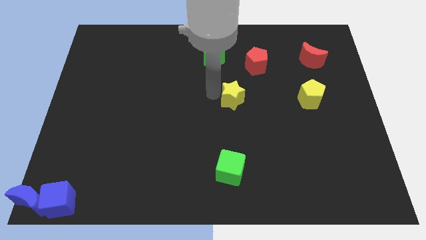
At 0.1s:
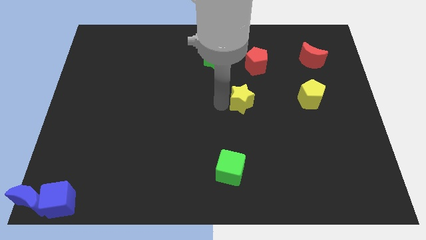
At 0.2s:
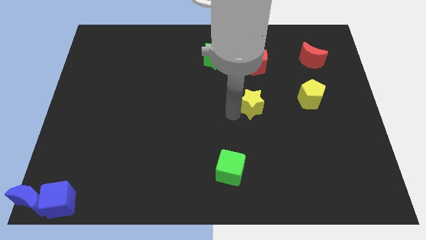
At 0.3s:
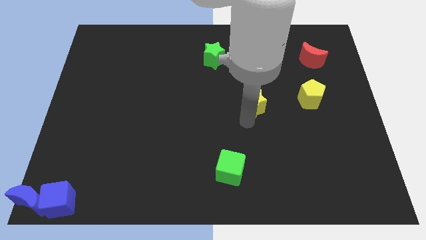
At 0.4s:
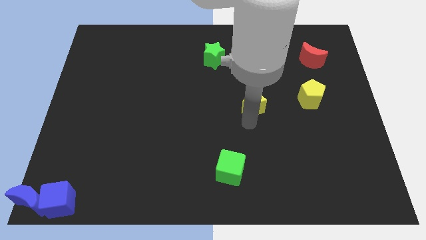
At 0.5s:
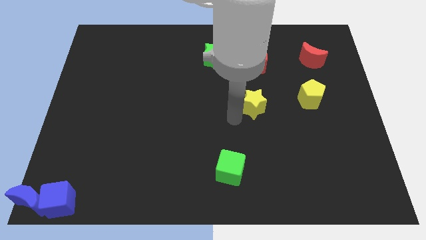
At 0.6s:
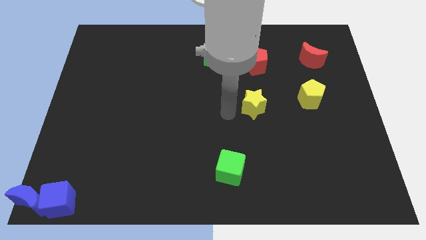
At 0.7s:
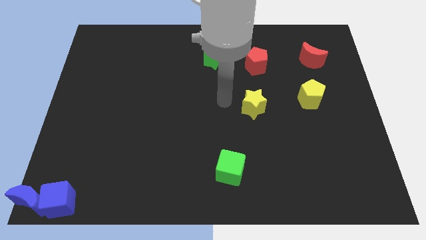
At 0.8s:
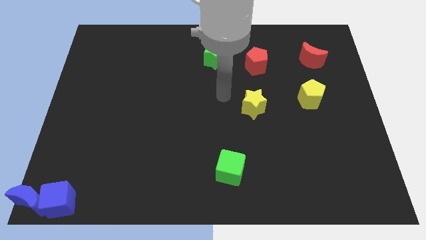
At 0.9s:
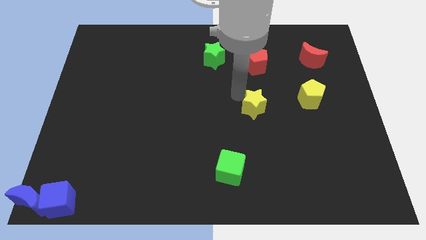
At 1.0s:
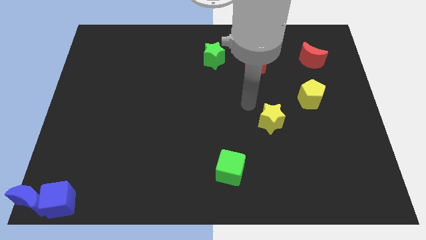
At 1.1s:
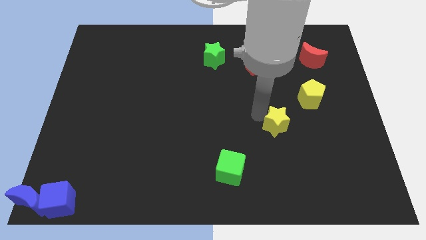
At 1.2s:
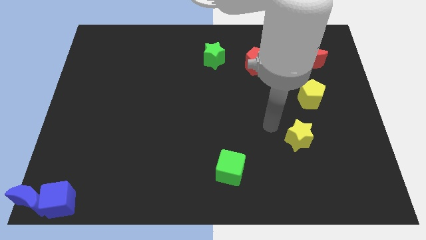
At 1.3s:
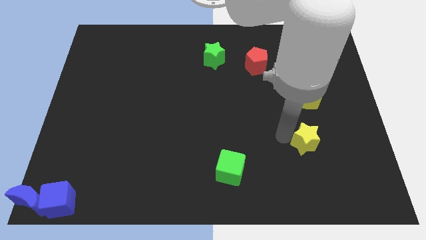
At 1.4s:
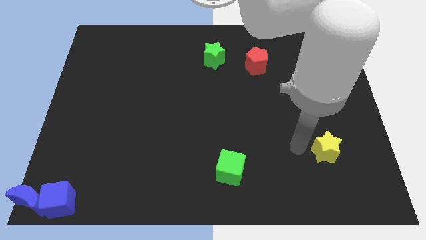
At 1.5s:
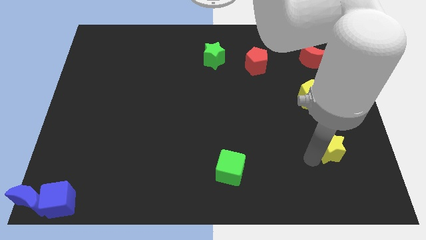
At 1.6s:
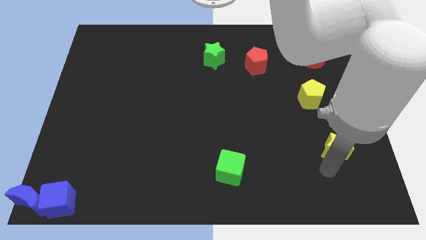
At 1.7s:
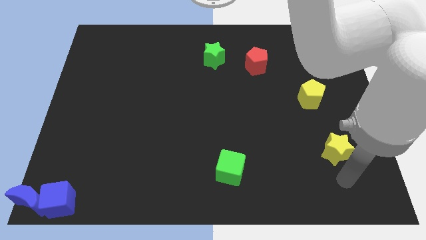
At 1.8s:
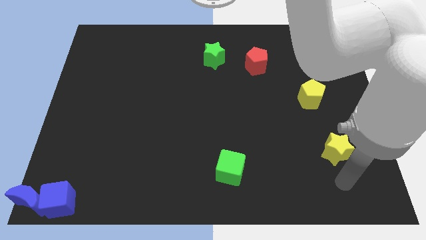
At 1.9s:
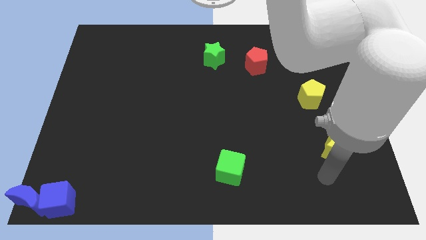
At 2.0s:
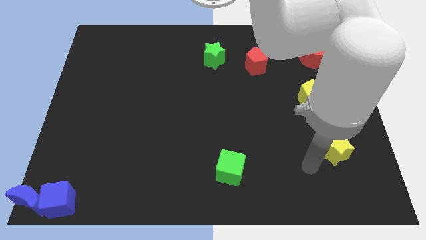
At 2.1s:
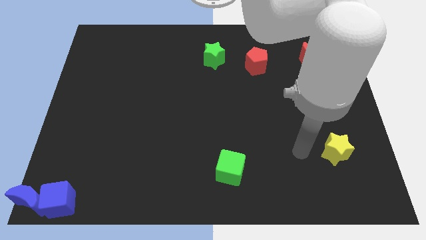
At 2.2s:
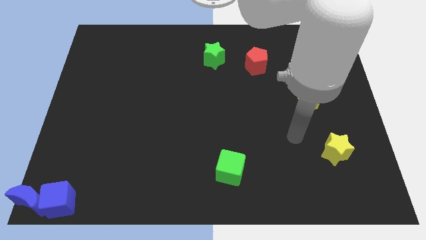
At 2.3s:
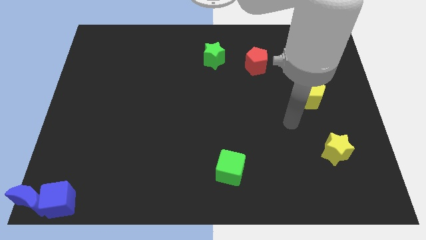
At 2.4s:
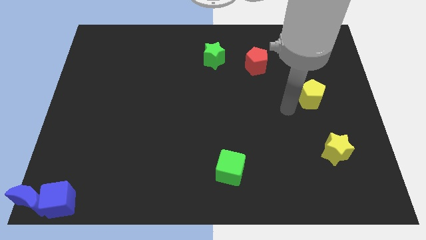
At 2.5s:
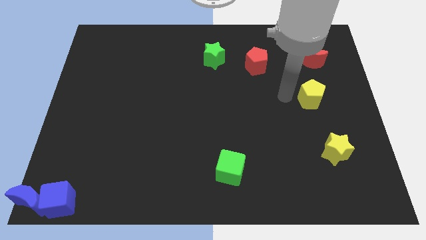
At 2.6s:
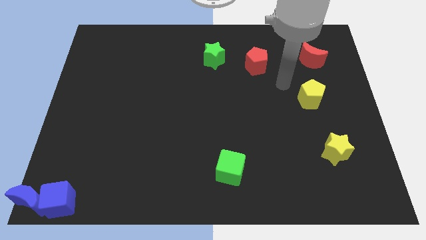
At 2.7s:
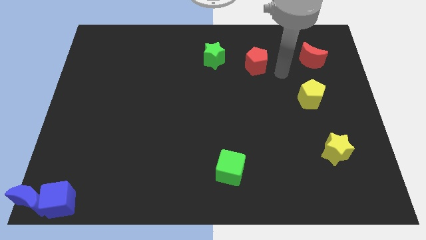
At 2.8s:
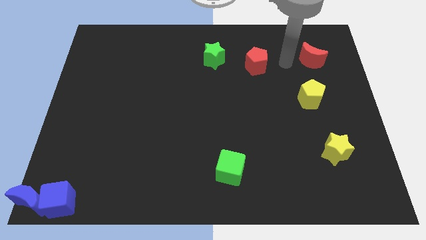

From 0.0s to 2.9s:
push the yellow star diagonally down

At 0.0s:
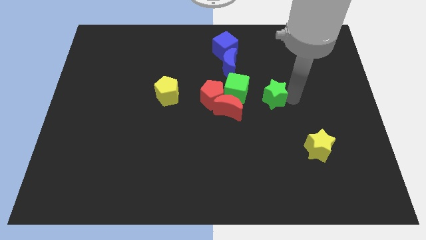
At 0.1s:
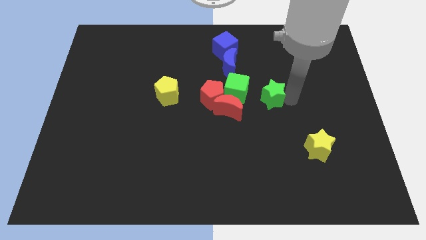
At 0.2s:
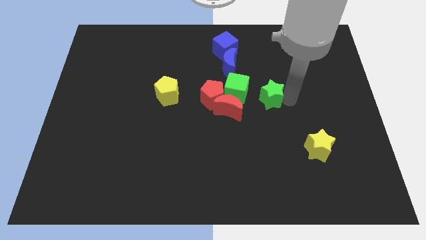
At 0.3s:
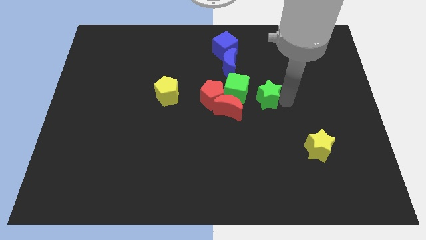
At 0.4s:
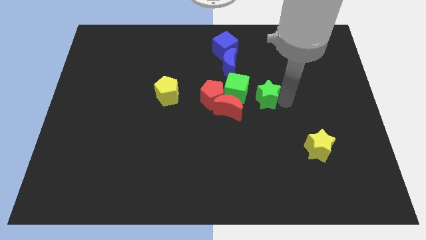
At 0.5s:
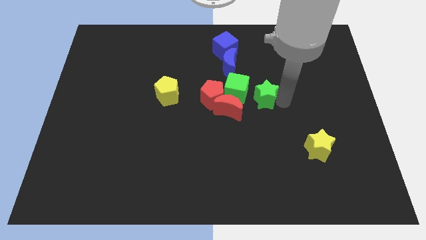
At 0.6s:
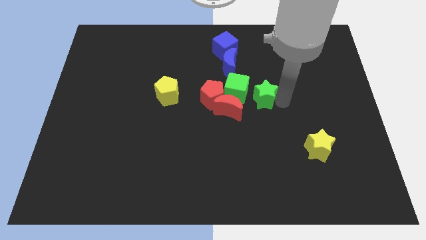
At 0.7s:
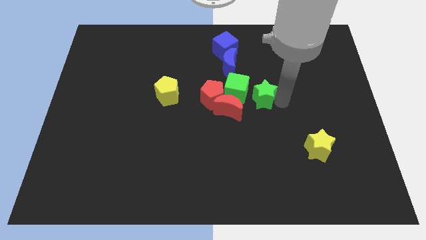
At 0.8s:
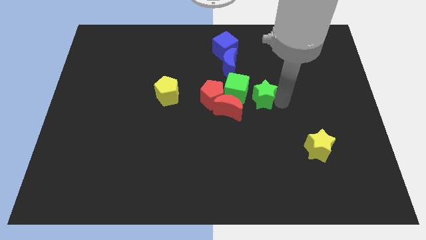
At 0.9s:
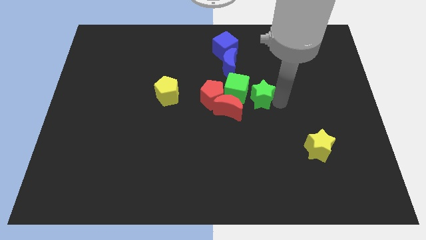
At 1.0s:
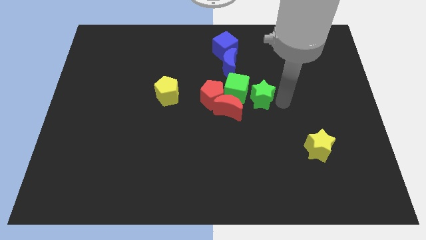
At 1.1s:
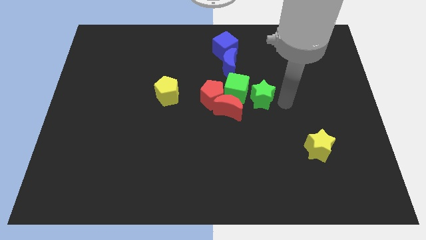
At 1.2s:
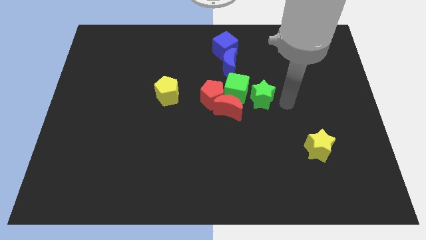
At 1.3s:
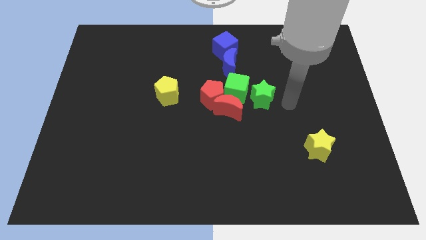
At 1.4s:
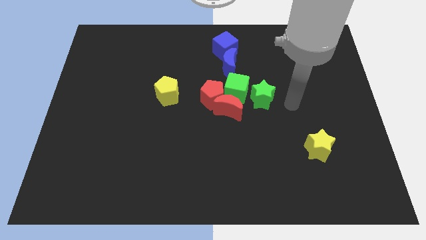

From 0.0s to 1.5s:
arrange the green star on the right side of the green cube

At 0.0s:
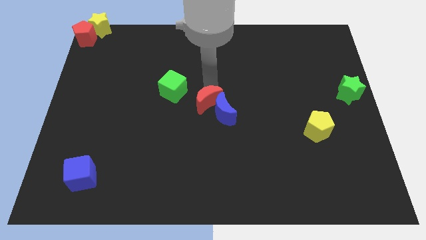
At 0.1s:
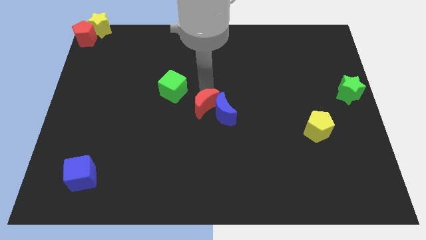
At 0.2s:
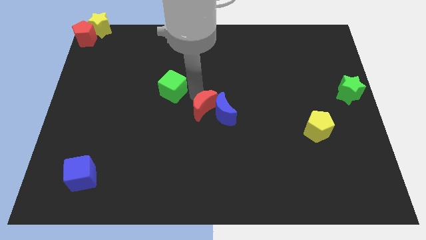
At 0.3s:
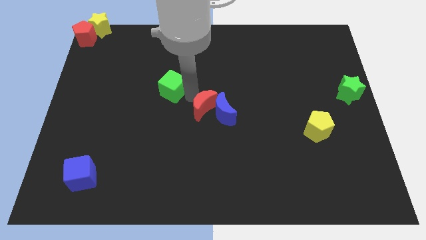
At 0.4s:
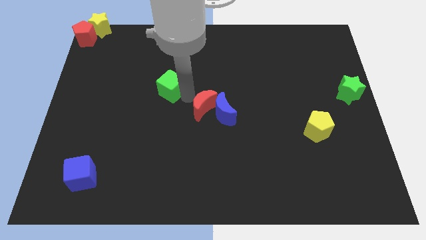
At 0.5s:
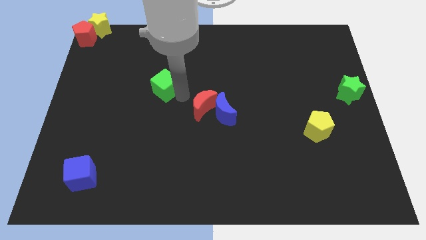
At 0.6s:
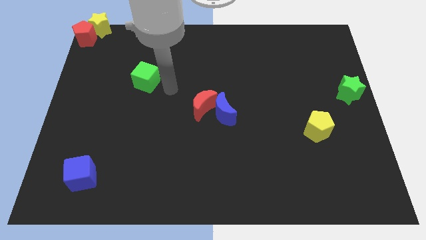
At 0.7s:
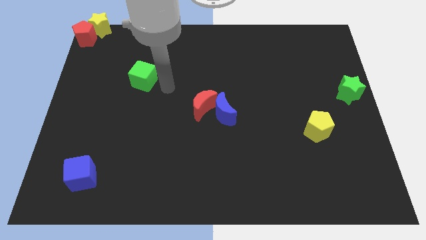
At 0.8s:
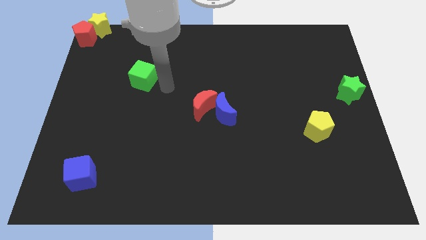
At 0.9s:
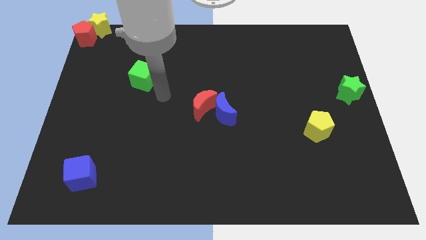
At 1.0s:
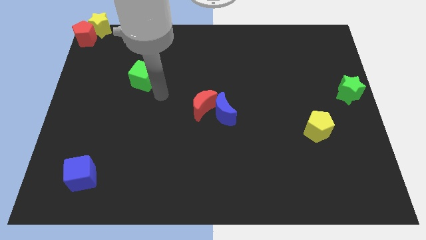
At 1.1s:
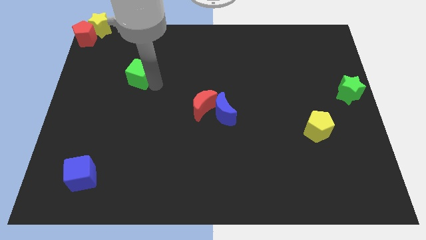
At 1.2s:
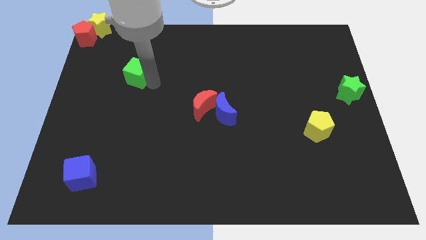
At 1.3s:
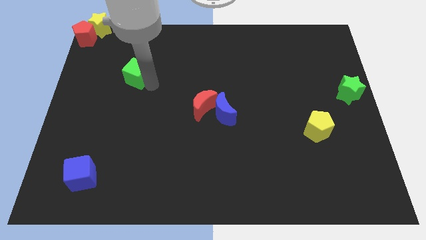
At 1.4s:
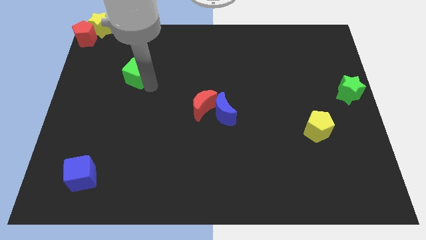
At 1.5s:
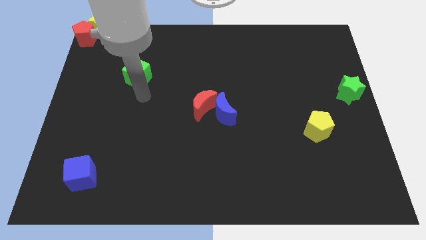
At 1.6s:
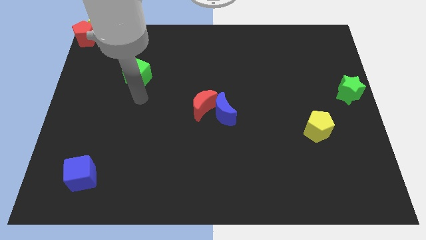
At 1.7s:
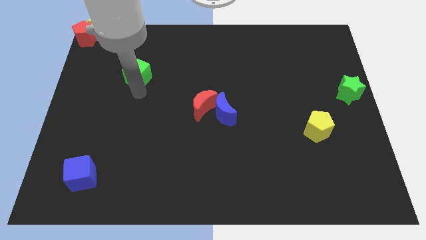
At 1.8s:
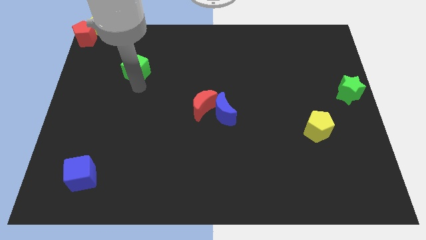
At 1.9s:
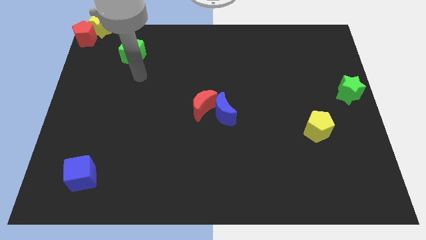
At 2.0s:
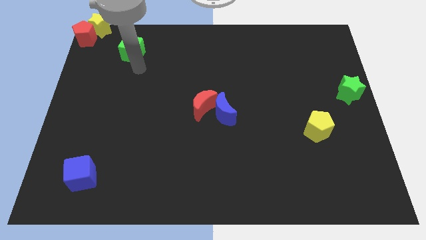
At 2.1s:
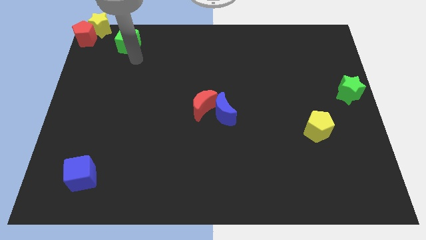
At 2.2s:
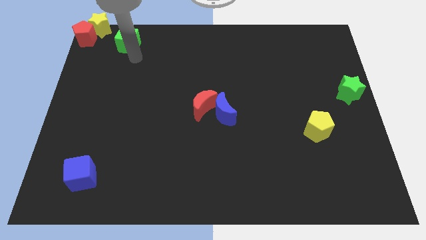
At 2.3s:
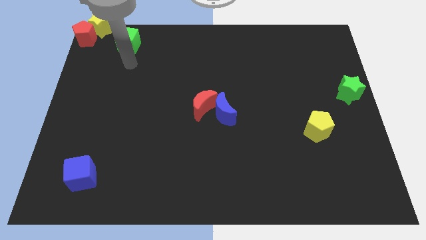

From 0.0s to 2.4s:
move the green cube towrads the yellow star

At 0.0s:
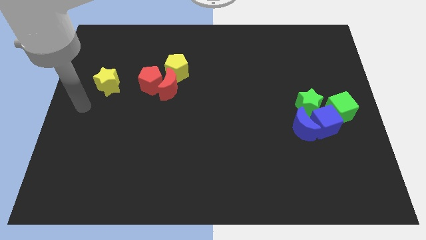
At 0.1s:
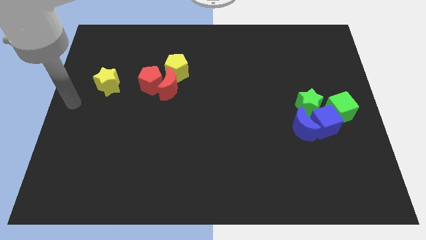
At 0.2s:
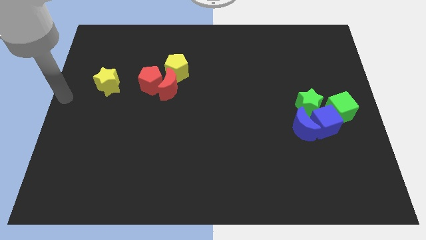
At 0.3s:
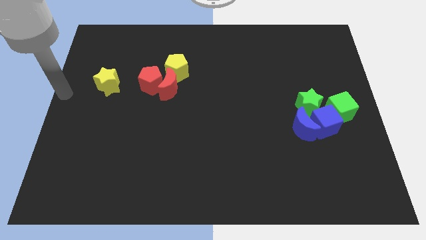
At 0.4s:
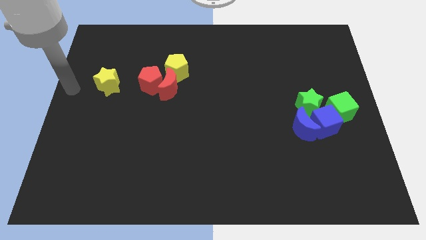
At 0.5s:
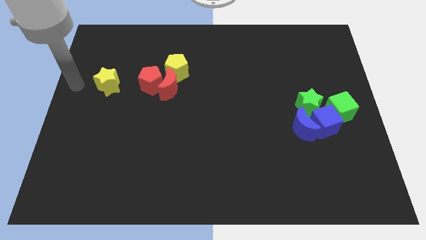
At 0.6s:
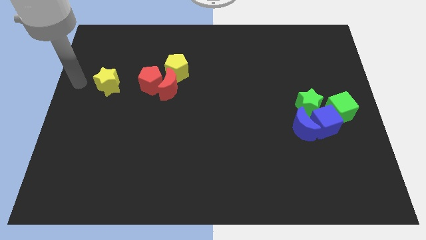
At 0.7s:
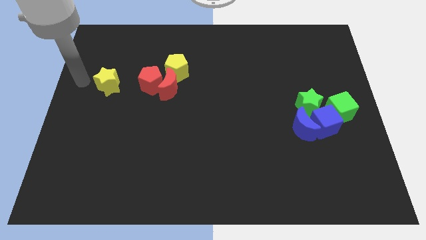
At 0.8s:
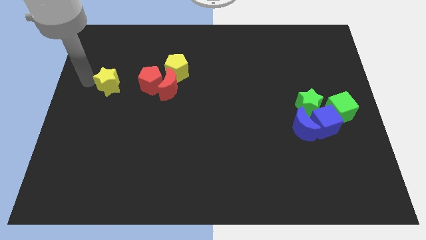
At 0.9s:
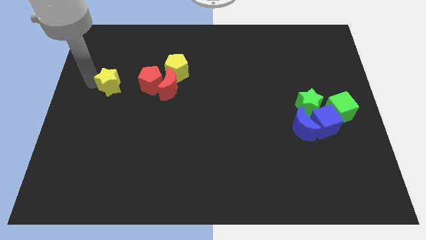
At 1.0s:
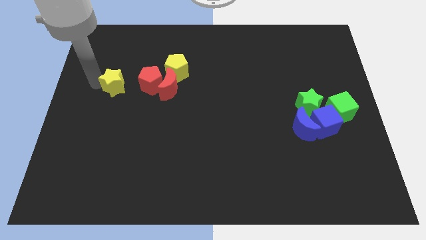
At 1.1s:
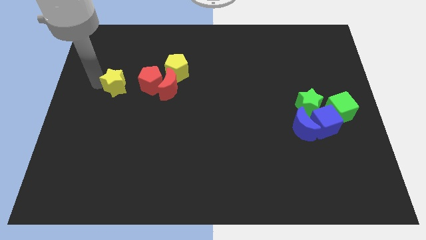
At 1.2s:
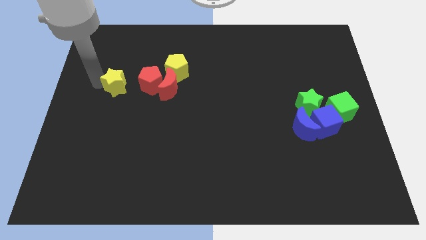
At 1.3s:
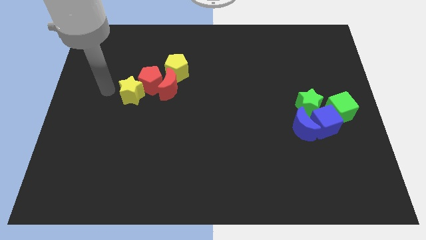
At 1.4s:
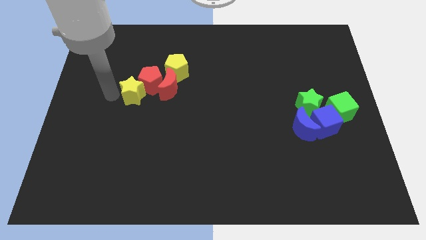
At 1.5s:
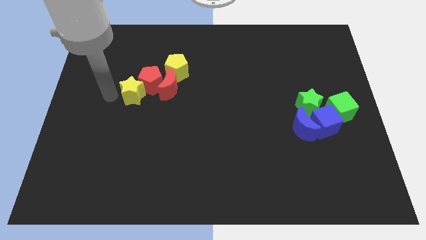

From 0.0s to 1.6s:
move the yellow star diagonal bottom left to red pentagon

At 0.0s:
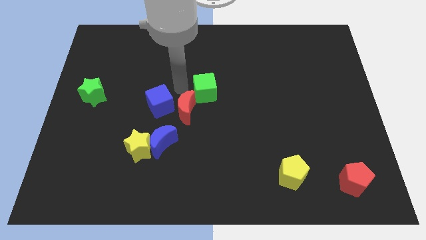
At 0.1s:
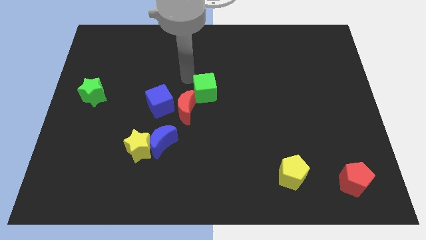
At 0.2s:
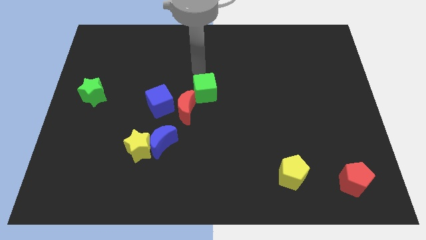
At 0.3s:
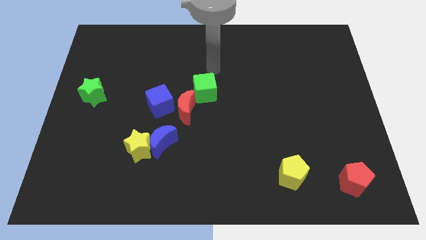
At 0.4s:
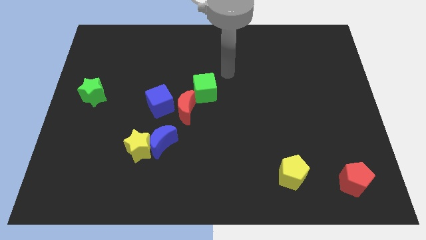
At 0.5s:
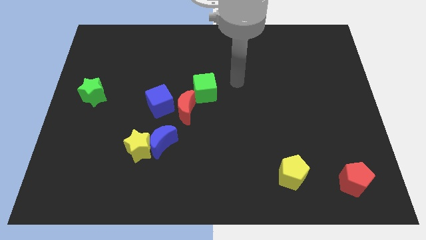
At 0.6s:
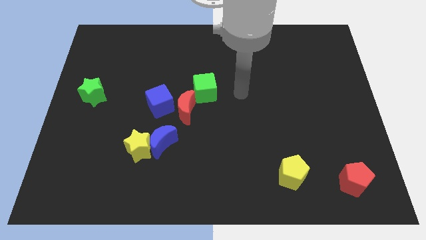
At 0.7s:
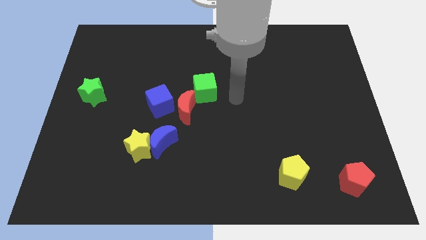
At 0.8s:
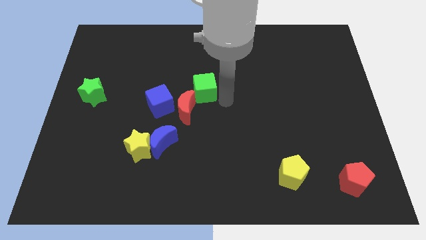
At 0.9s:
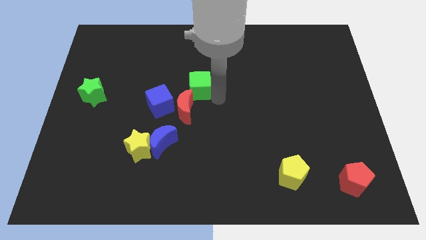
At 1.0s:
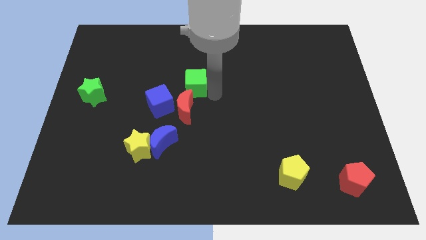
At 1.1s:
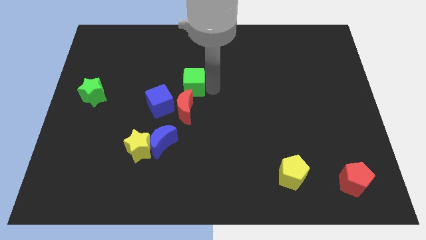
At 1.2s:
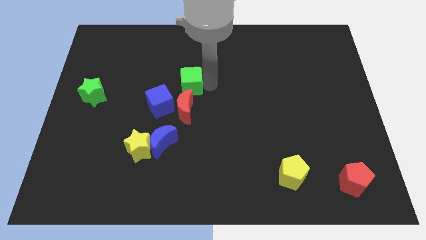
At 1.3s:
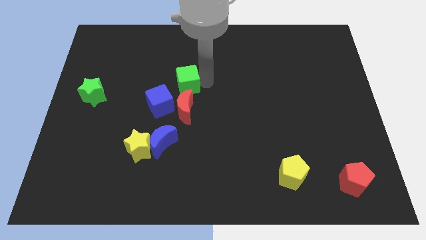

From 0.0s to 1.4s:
put the green cube at the top of red moon
